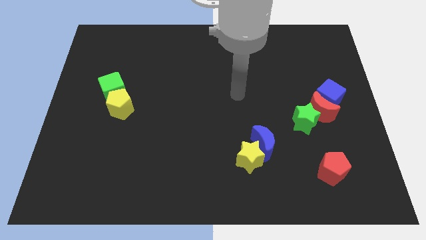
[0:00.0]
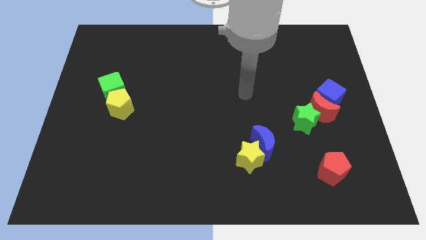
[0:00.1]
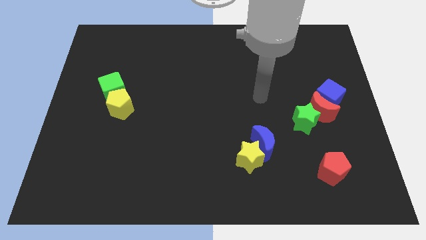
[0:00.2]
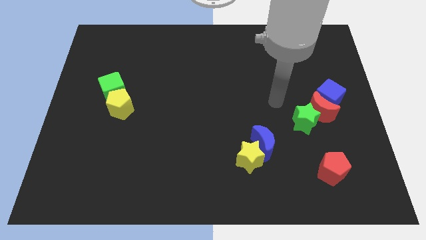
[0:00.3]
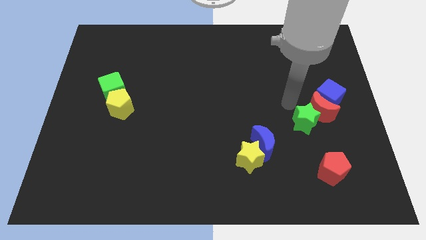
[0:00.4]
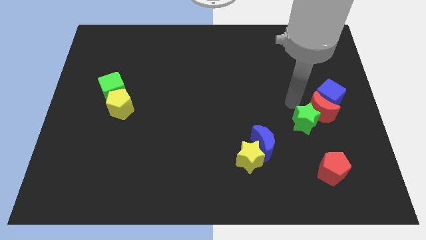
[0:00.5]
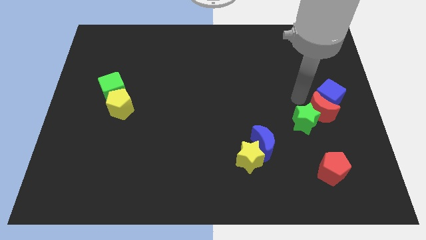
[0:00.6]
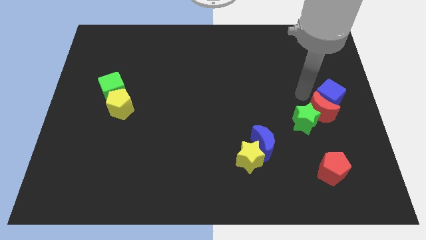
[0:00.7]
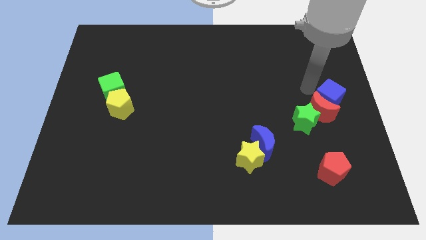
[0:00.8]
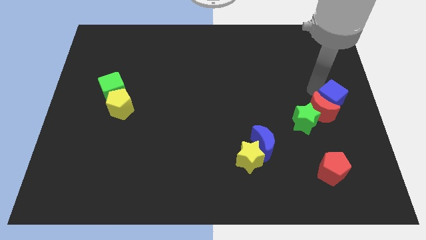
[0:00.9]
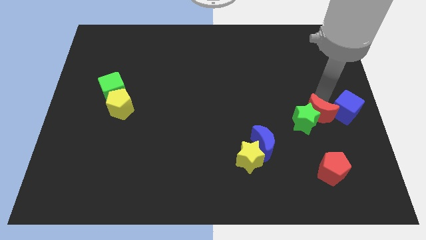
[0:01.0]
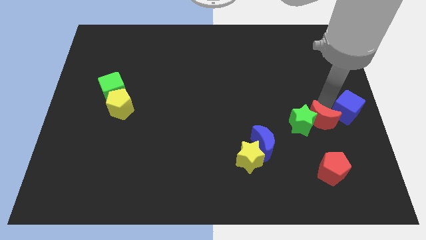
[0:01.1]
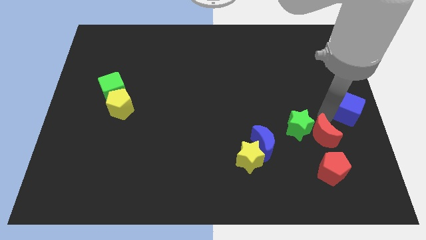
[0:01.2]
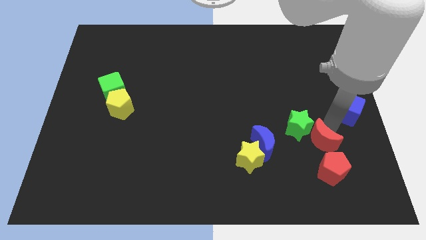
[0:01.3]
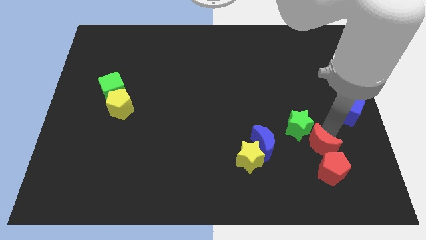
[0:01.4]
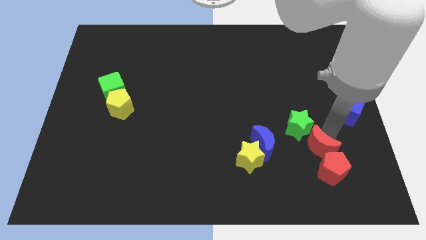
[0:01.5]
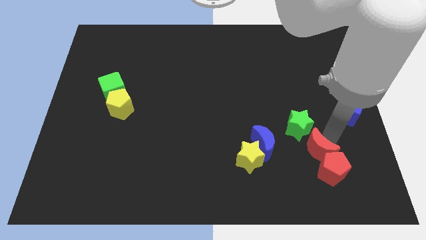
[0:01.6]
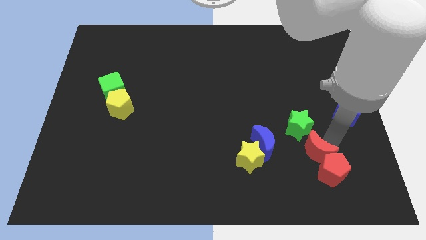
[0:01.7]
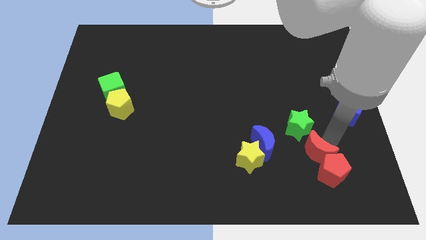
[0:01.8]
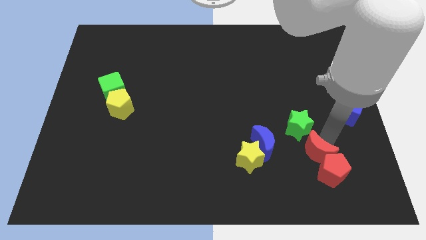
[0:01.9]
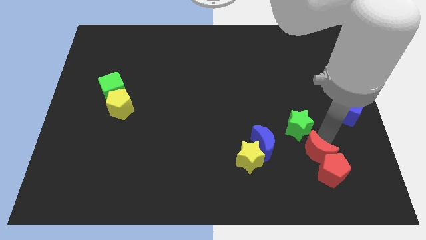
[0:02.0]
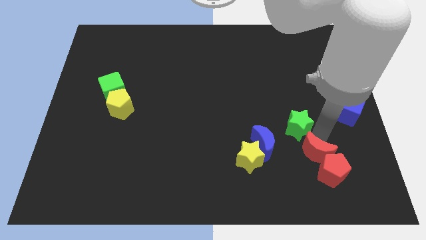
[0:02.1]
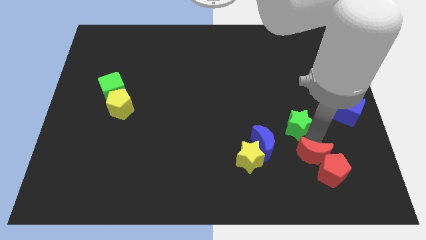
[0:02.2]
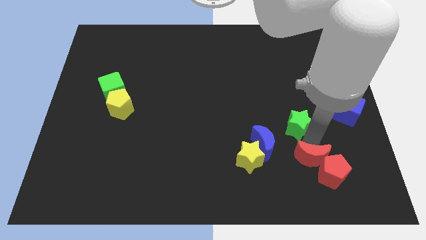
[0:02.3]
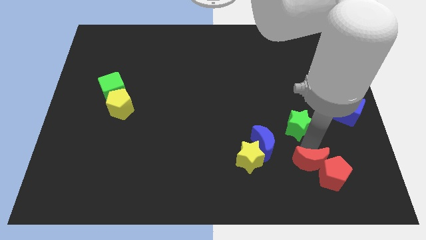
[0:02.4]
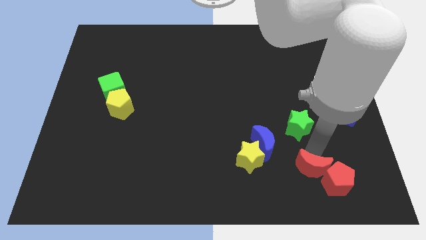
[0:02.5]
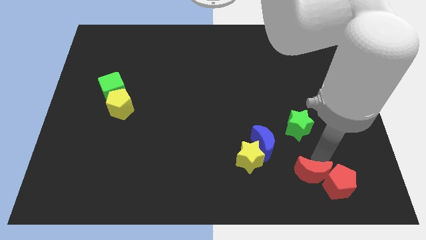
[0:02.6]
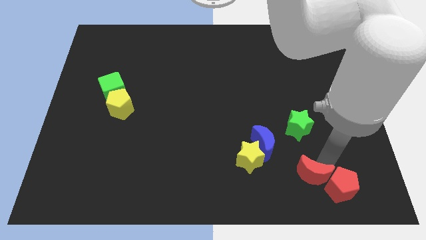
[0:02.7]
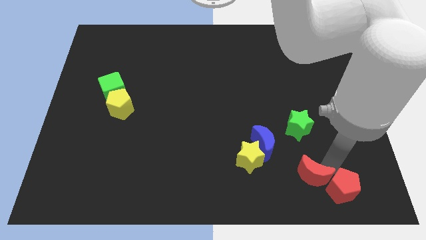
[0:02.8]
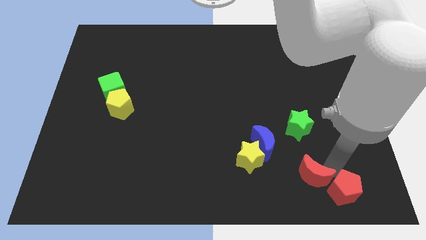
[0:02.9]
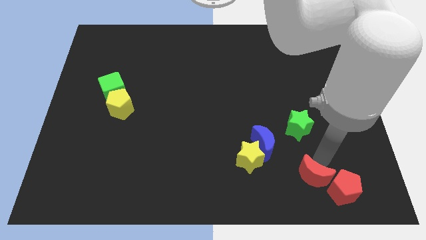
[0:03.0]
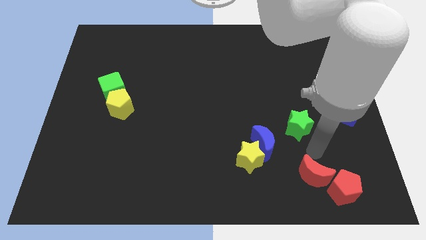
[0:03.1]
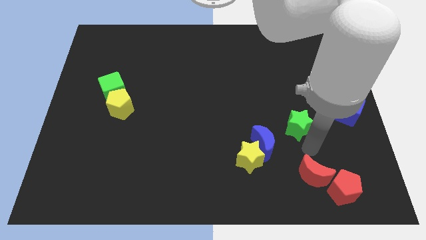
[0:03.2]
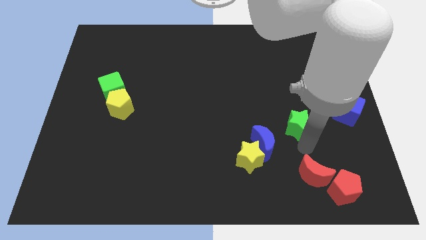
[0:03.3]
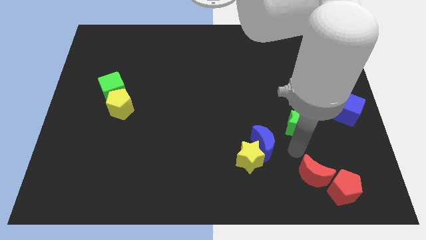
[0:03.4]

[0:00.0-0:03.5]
move the red crescent to the top left of the red pentagon

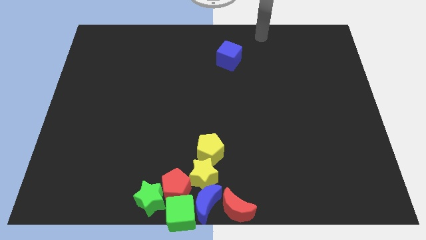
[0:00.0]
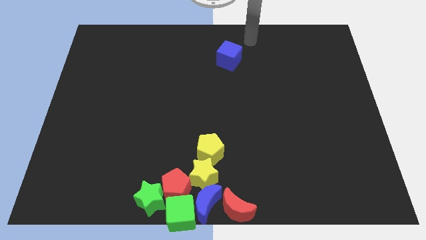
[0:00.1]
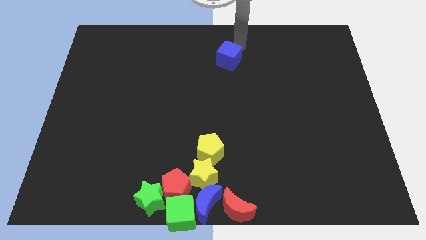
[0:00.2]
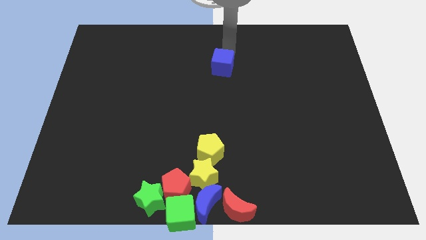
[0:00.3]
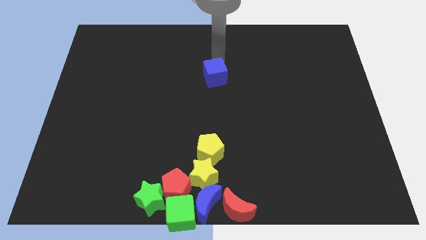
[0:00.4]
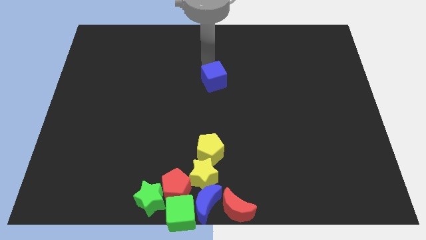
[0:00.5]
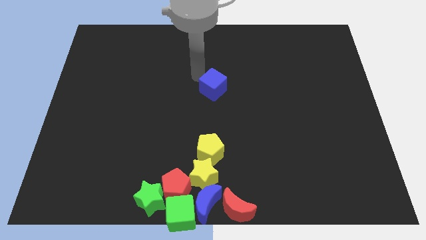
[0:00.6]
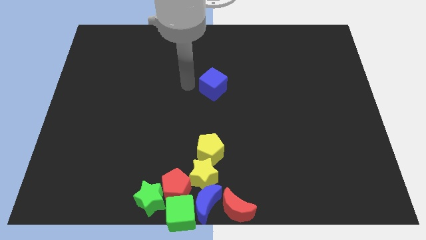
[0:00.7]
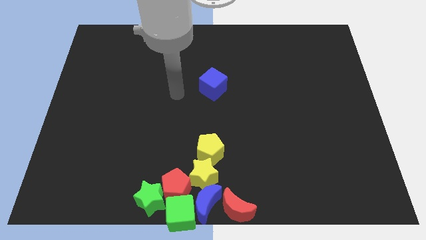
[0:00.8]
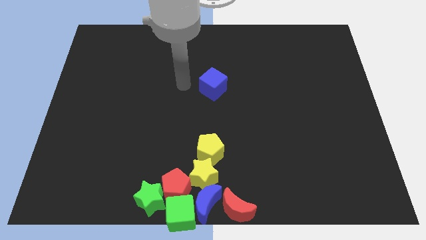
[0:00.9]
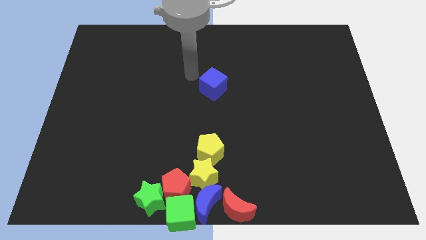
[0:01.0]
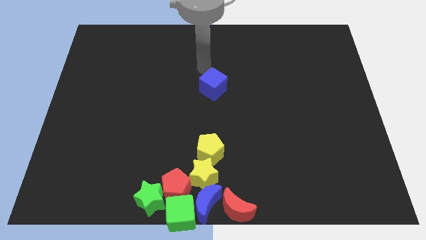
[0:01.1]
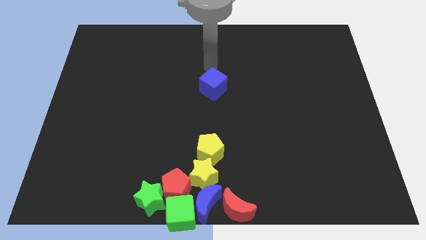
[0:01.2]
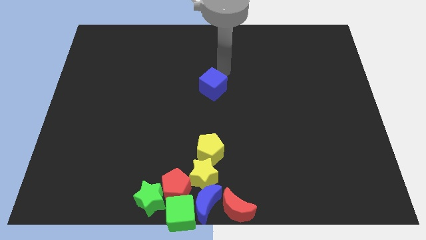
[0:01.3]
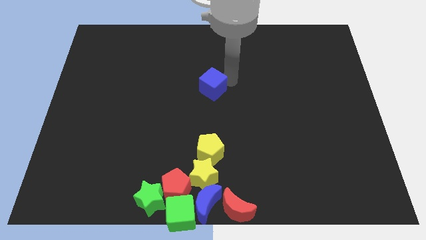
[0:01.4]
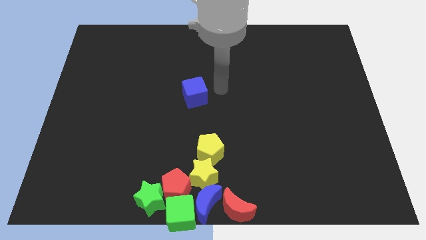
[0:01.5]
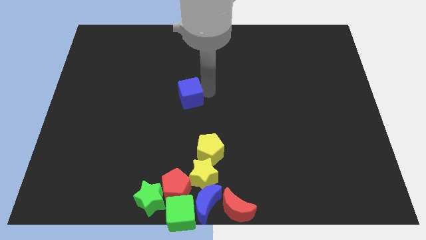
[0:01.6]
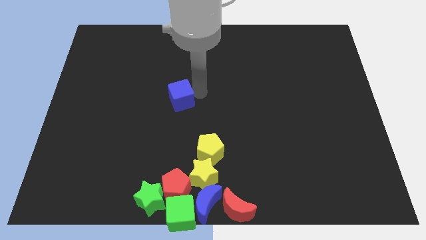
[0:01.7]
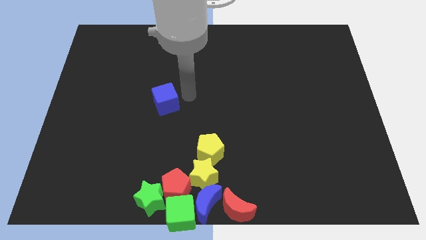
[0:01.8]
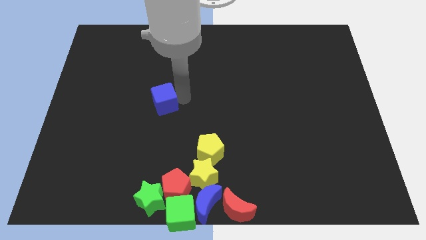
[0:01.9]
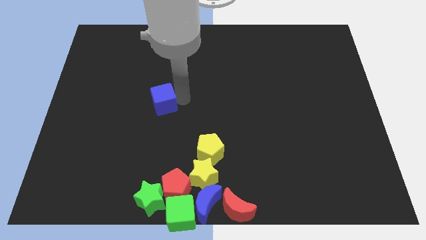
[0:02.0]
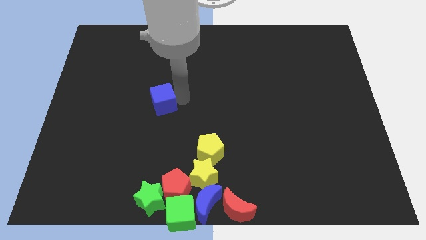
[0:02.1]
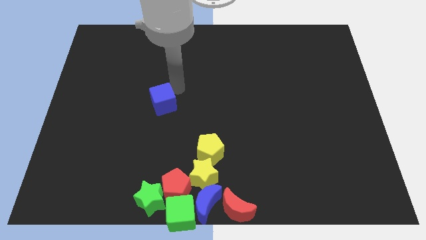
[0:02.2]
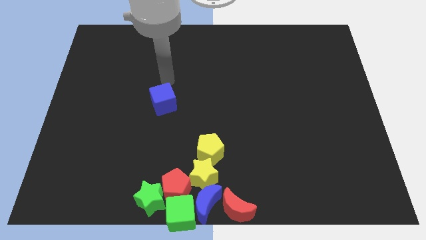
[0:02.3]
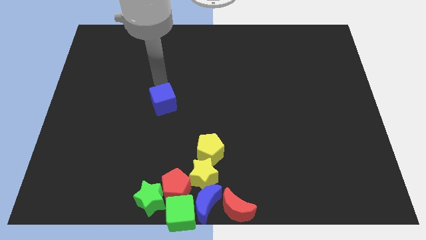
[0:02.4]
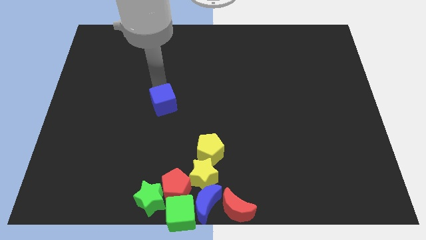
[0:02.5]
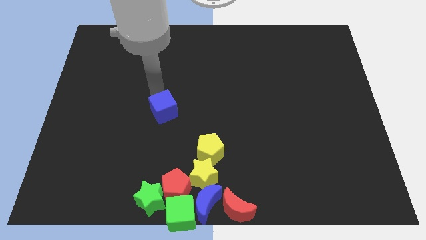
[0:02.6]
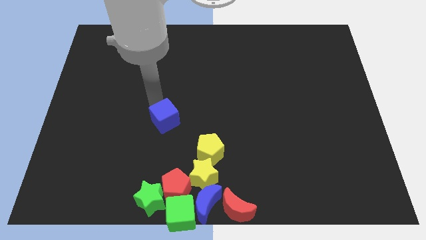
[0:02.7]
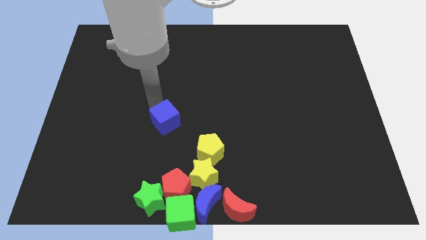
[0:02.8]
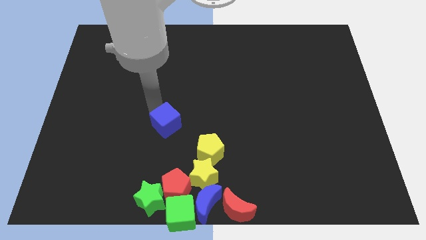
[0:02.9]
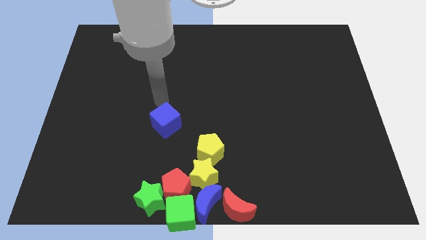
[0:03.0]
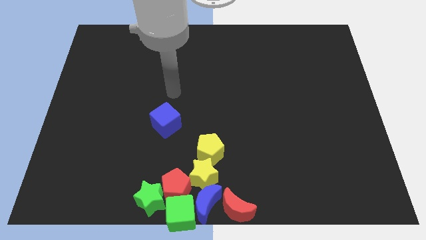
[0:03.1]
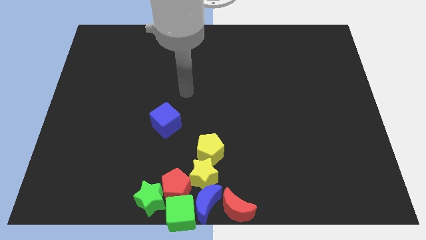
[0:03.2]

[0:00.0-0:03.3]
place the blue cube diagonal to the yellow pentagon

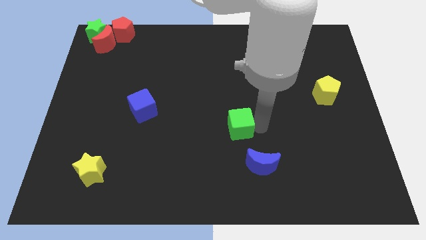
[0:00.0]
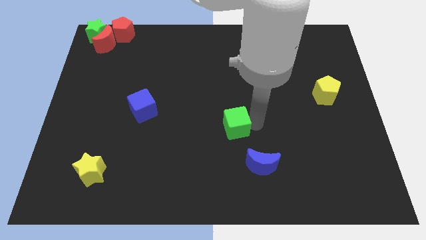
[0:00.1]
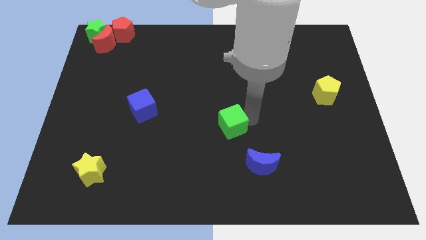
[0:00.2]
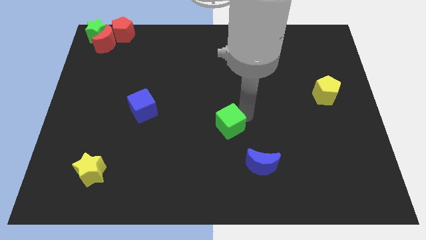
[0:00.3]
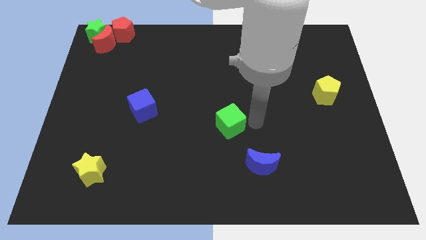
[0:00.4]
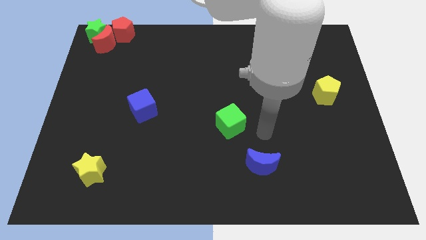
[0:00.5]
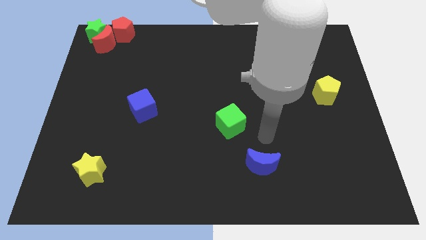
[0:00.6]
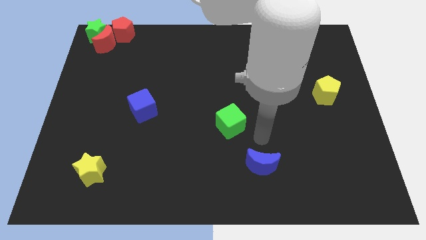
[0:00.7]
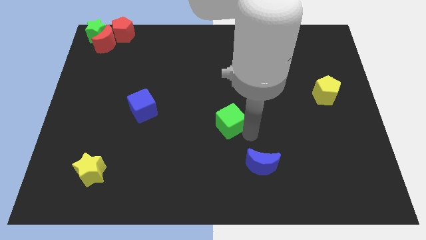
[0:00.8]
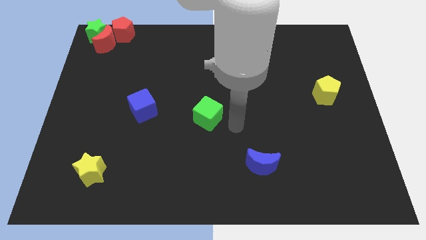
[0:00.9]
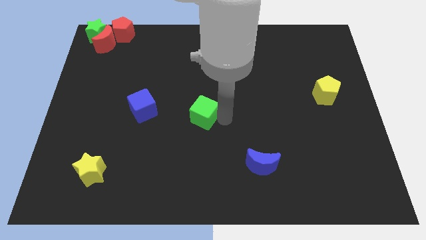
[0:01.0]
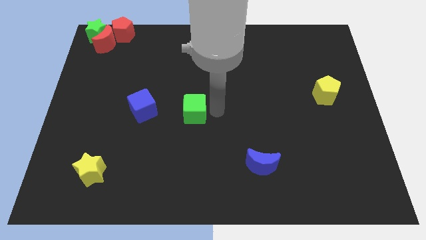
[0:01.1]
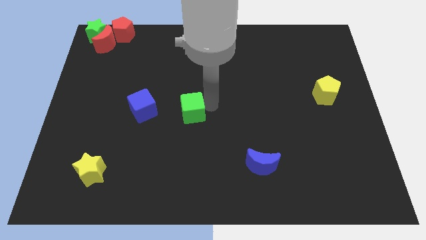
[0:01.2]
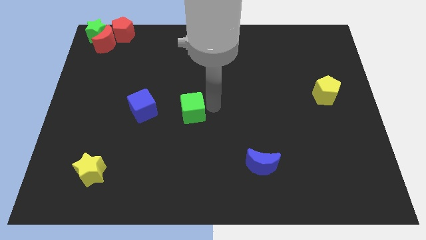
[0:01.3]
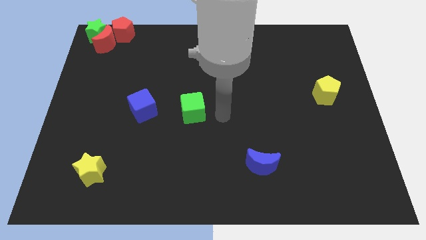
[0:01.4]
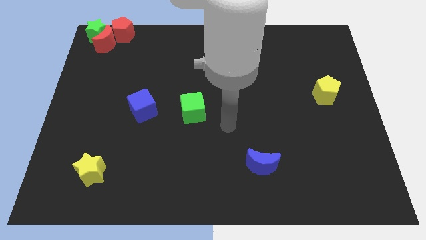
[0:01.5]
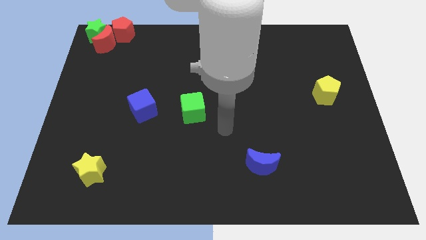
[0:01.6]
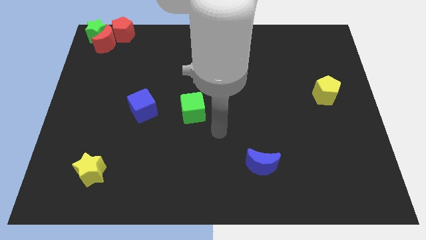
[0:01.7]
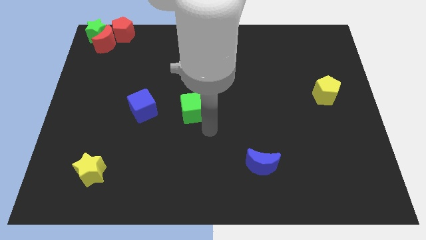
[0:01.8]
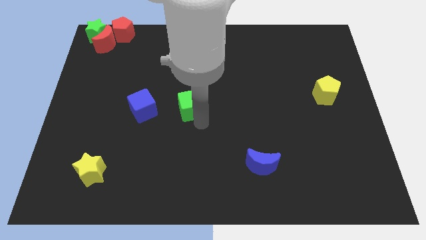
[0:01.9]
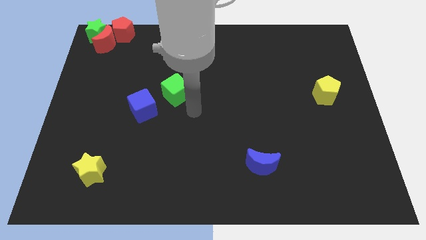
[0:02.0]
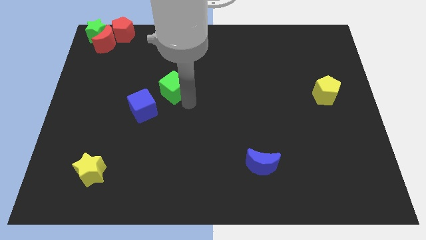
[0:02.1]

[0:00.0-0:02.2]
move green cube near blue cube
